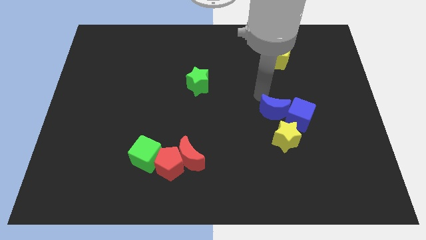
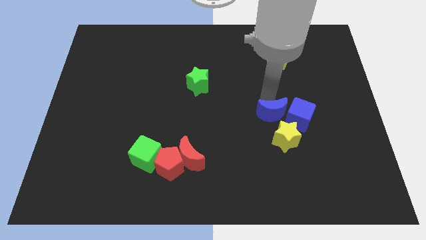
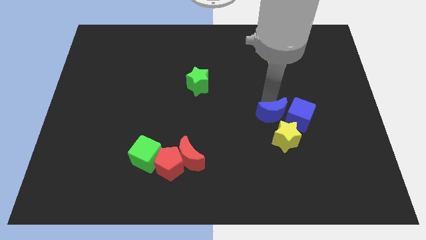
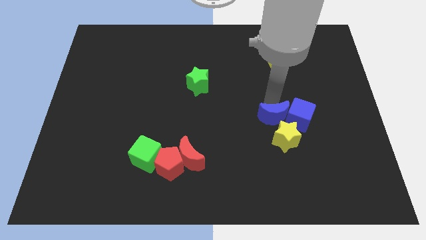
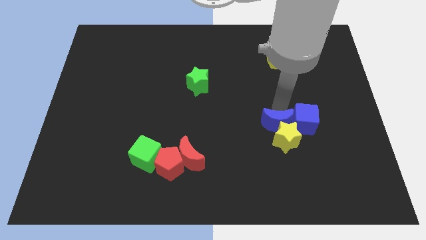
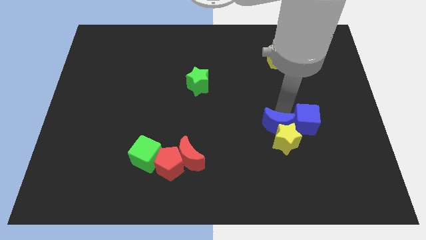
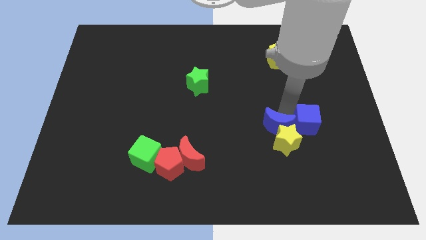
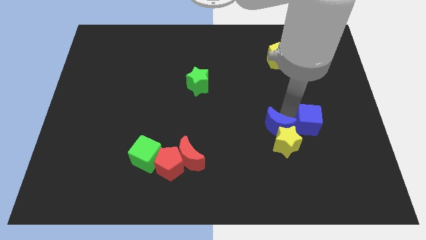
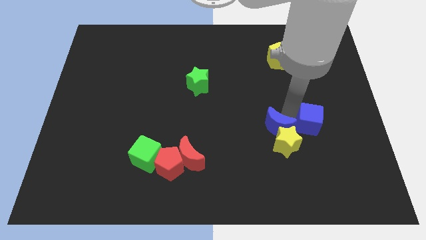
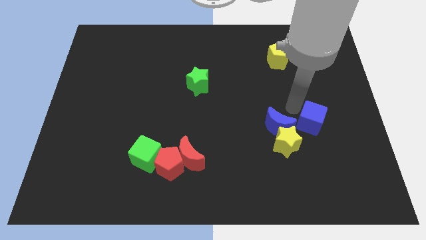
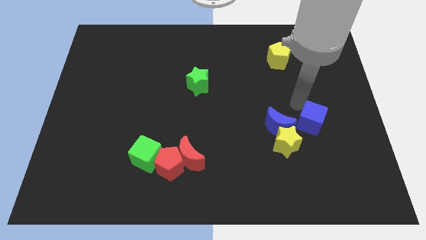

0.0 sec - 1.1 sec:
push the blue moon into the yellow star

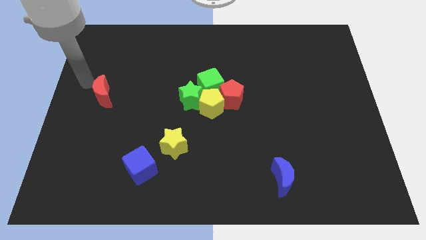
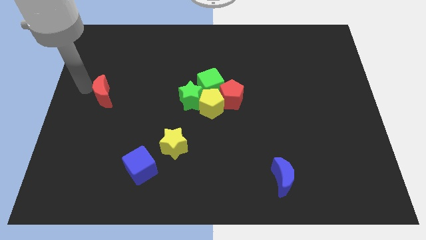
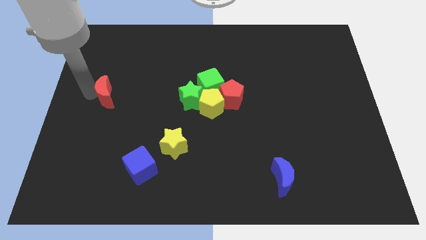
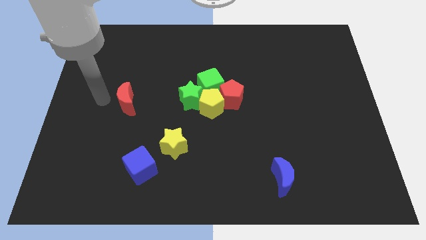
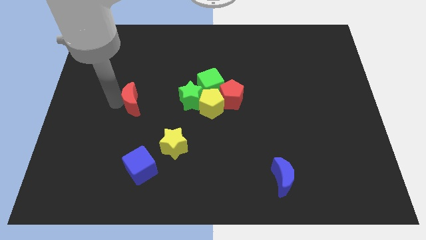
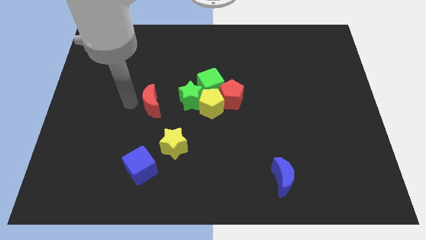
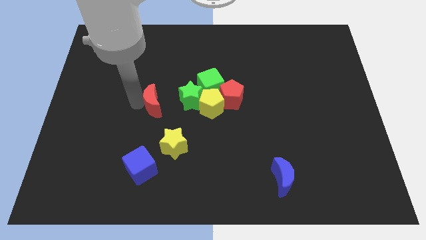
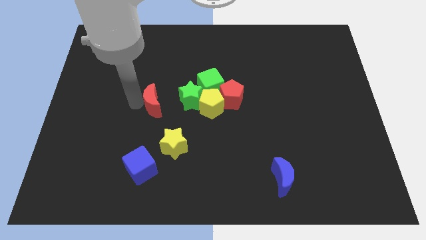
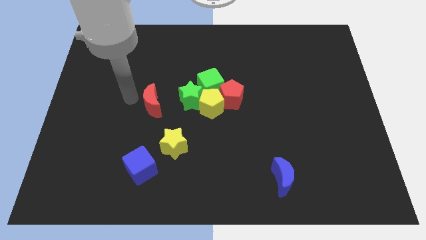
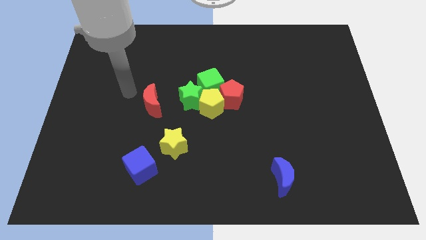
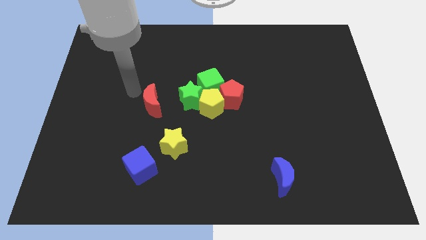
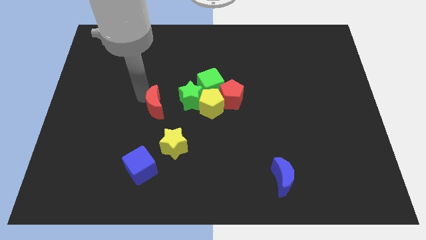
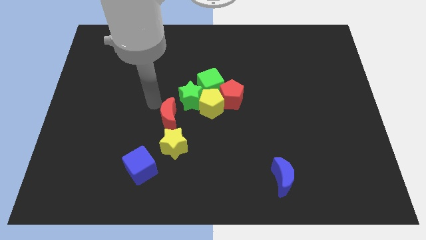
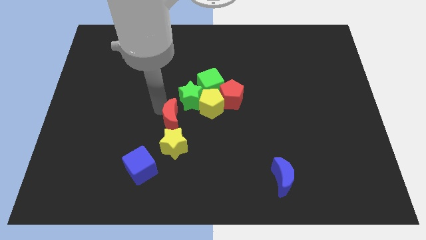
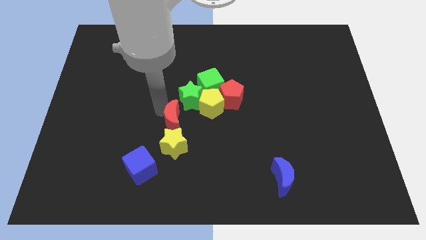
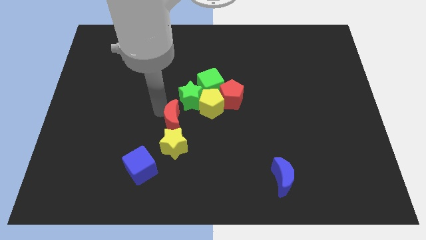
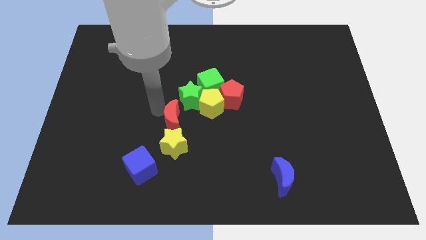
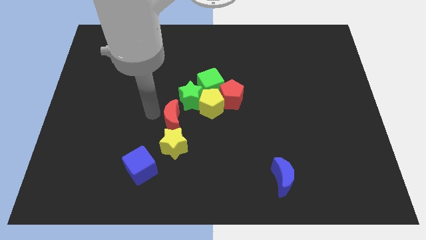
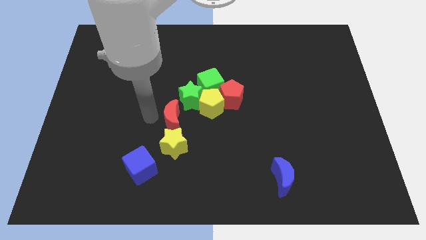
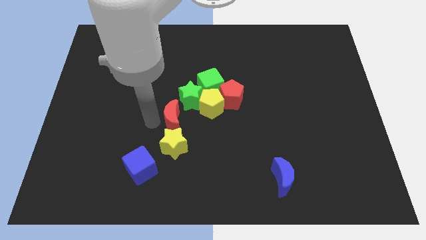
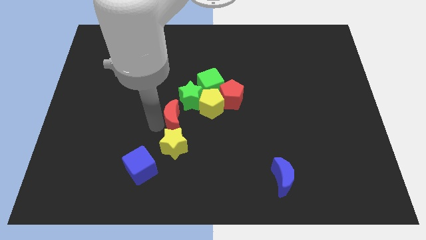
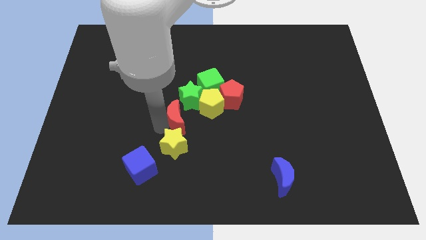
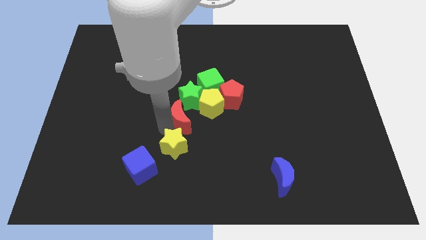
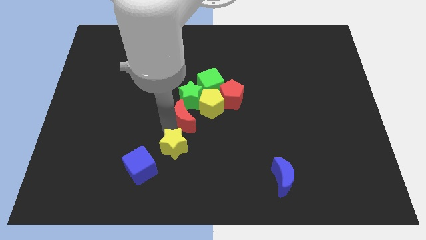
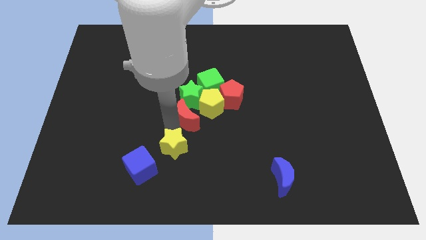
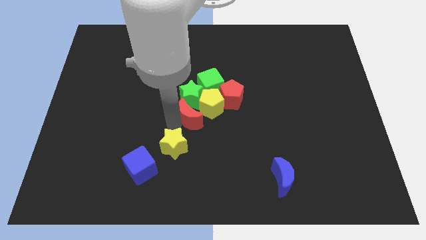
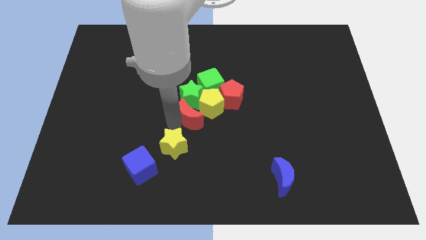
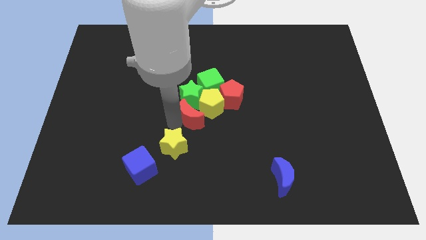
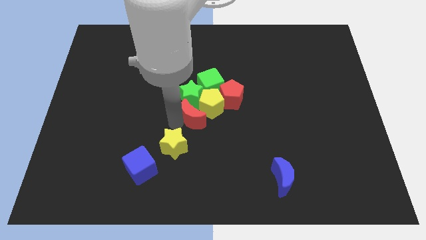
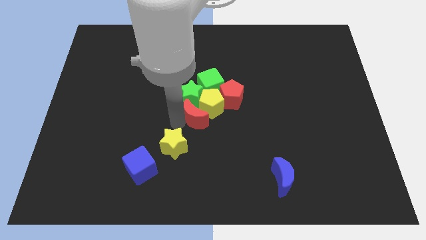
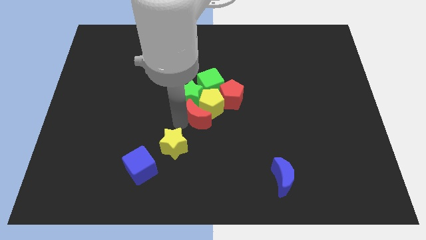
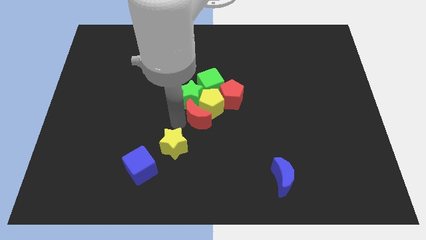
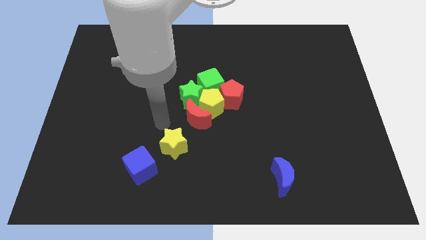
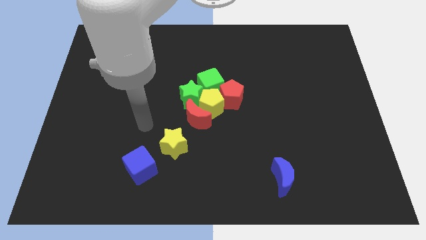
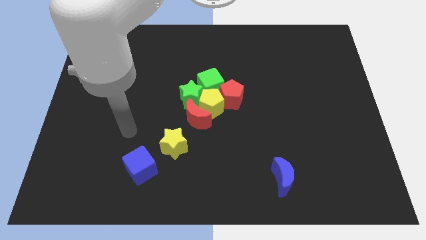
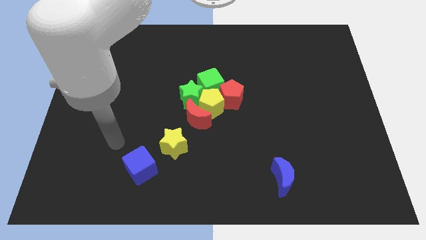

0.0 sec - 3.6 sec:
move the red crescent towards the center of the board

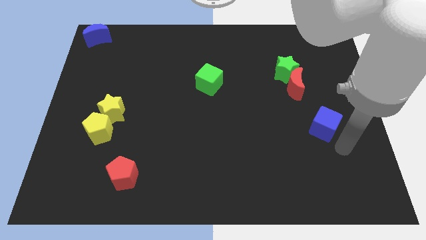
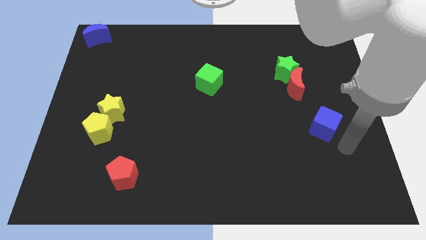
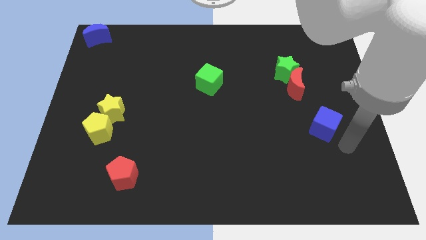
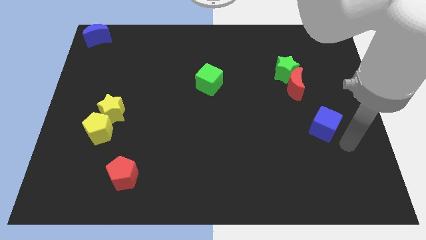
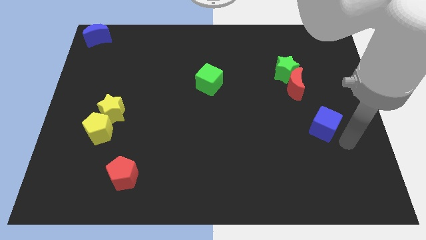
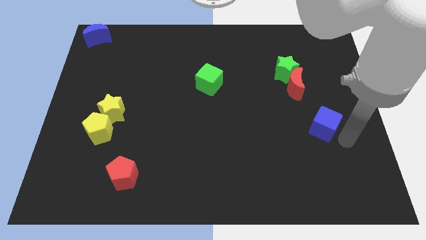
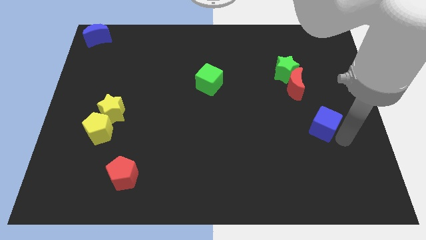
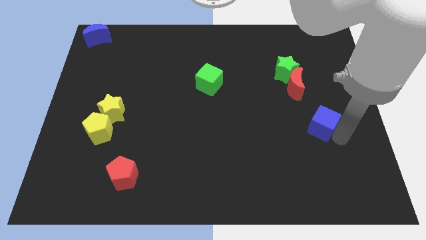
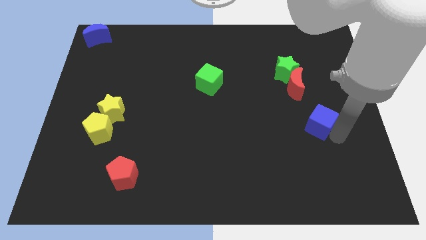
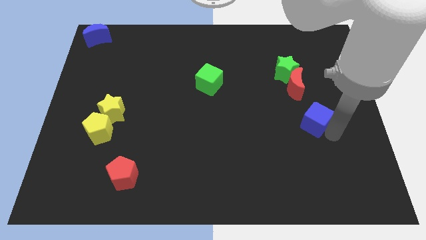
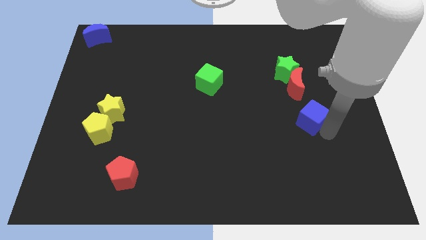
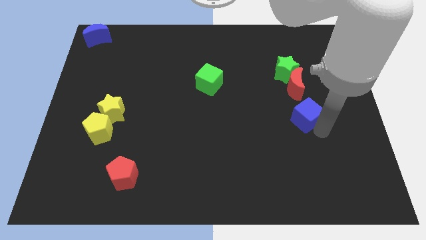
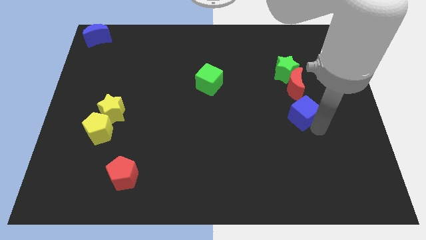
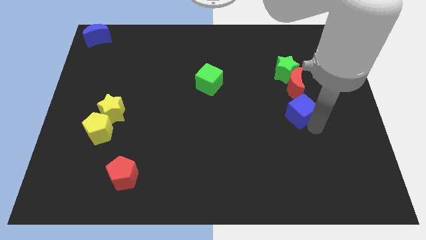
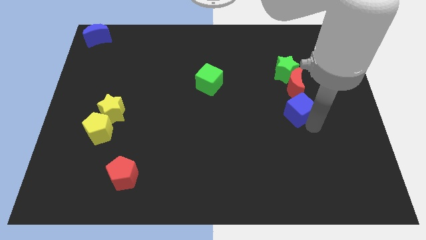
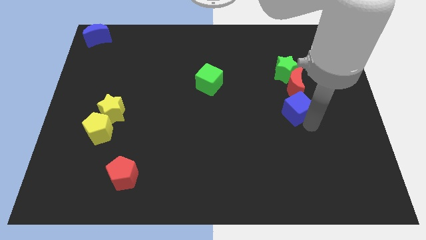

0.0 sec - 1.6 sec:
push the blue cube to the bottom side of the red moon

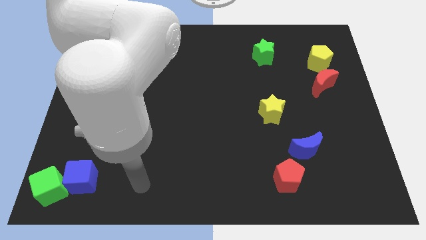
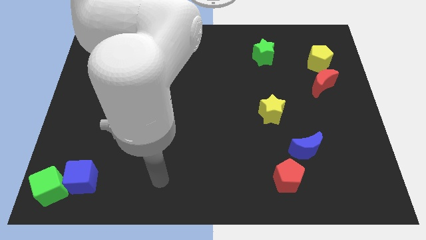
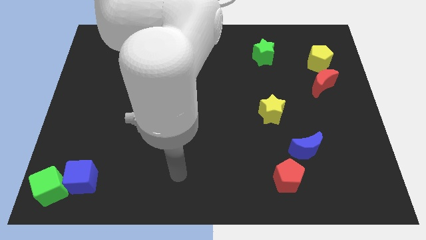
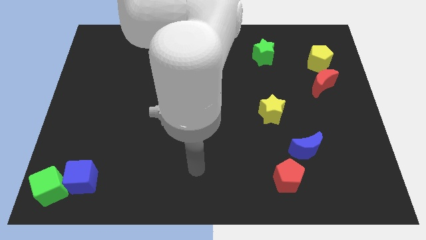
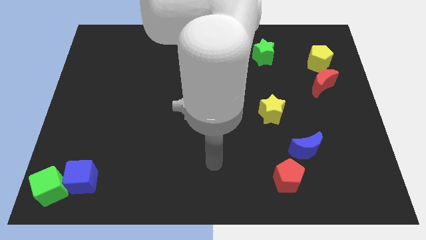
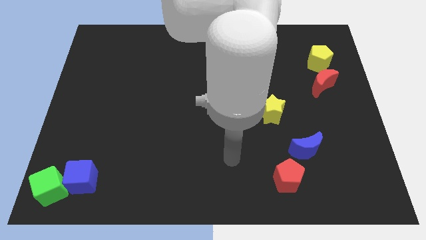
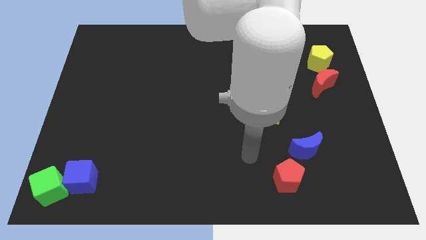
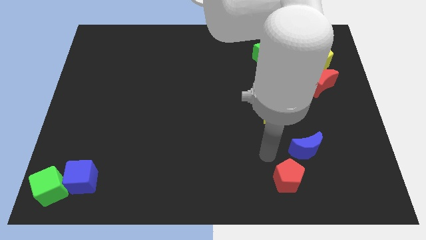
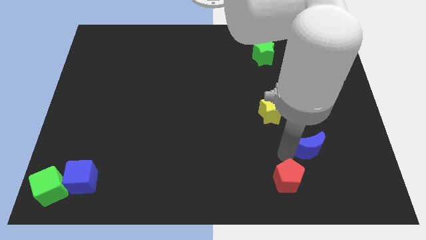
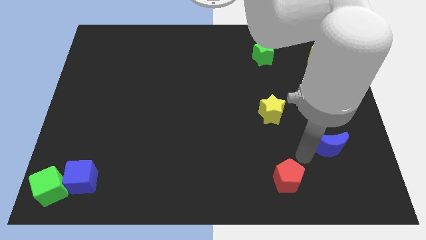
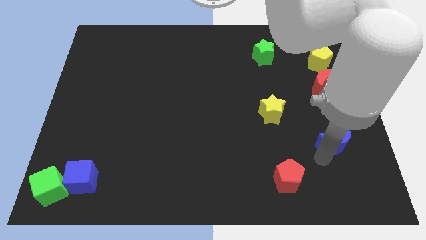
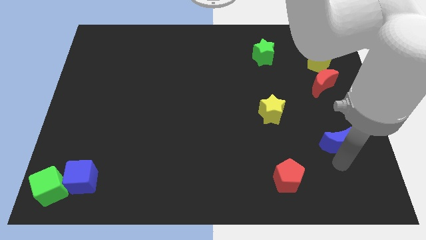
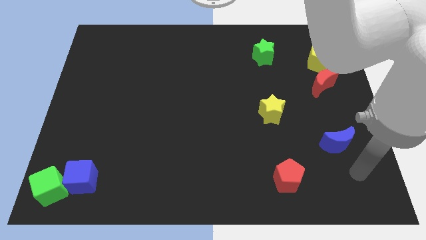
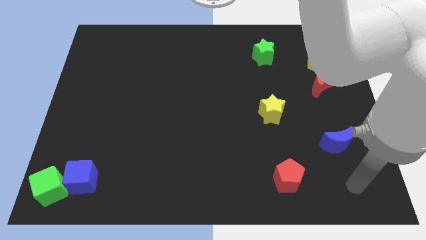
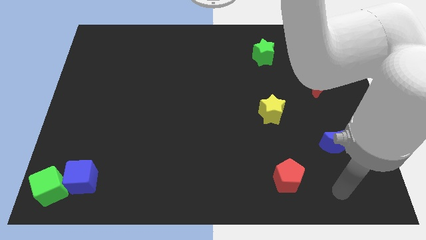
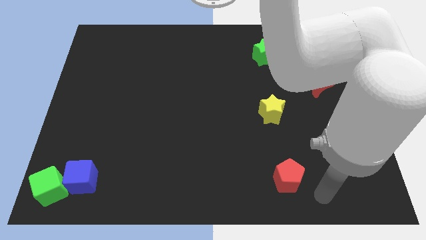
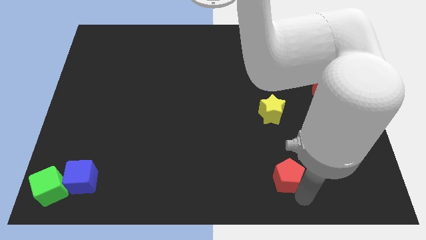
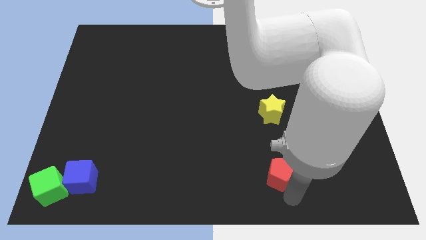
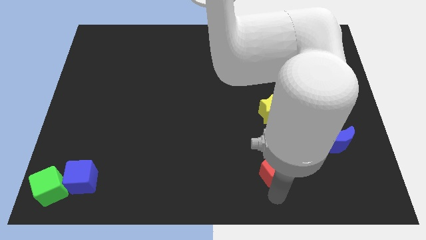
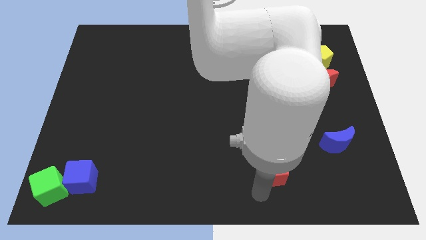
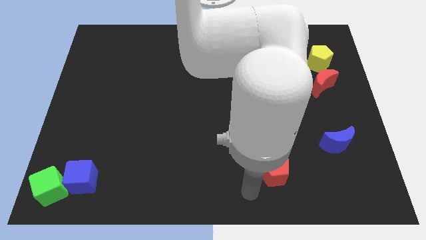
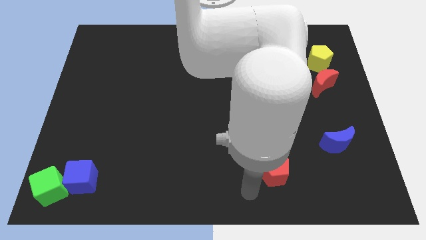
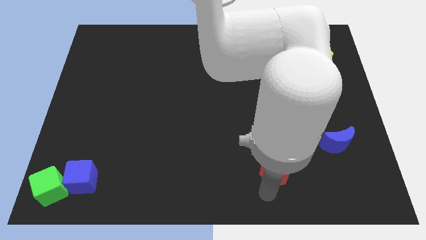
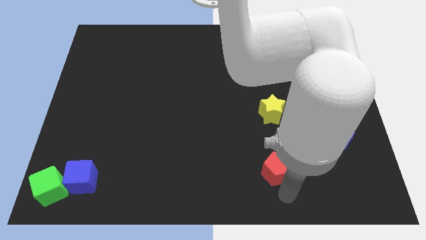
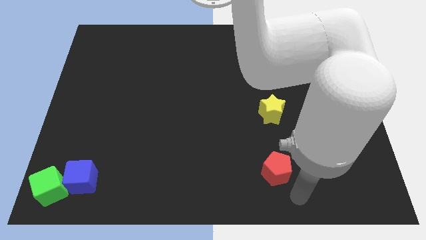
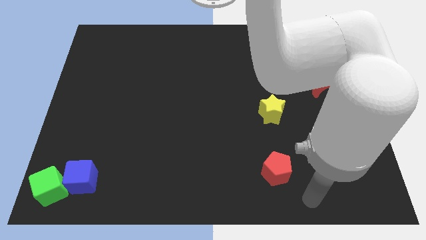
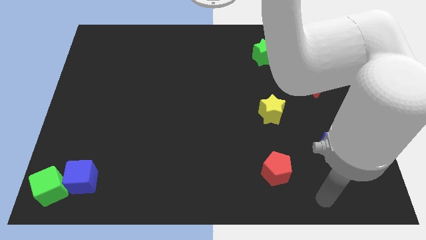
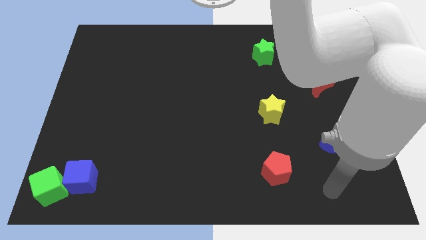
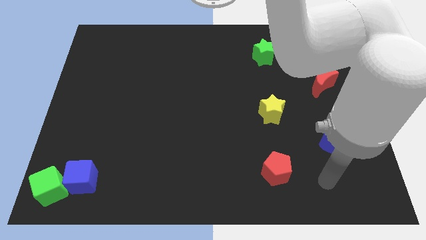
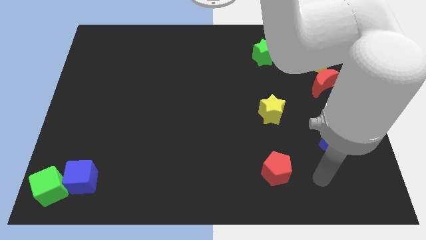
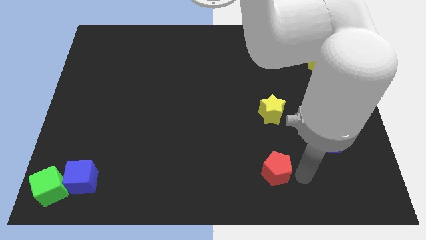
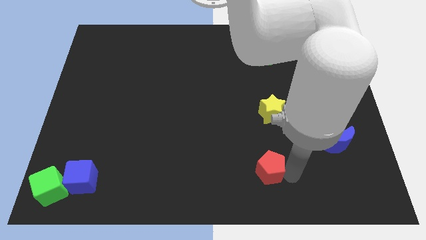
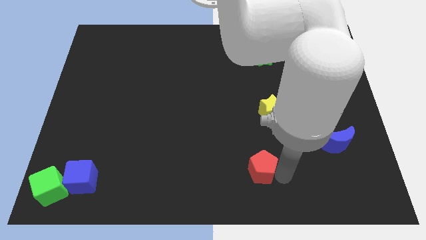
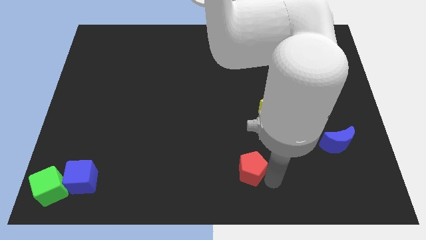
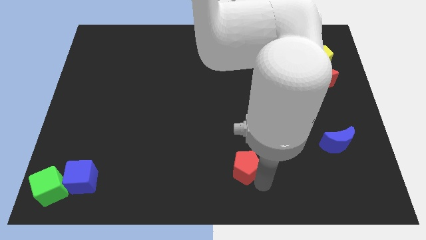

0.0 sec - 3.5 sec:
slightly move the blue moon to the right of the board
